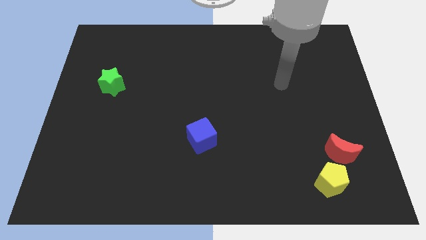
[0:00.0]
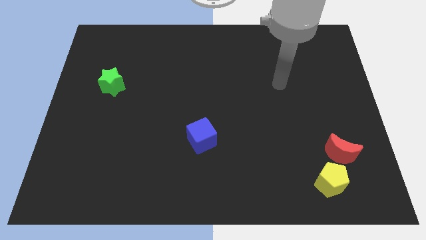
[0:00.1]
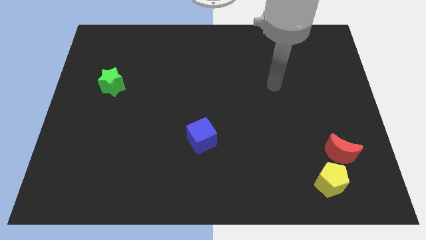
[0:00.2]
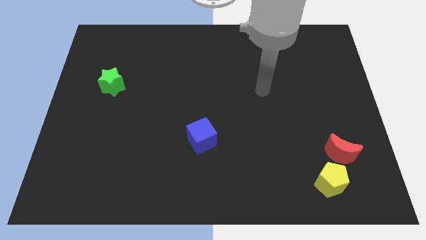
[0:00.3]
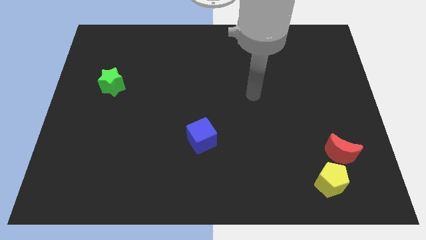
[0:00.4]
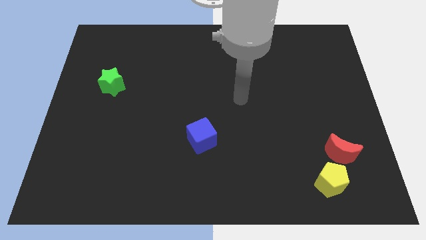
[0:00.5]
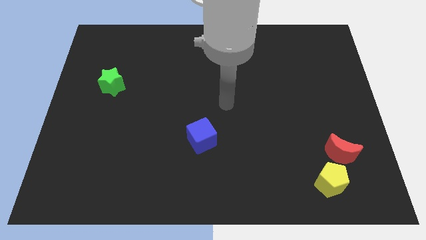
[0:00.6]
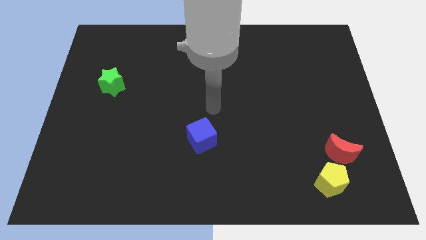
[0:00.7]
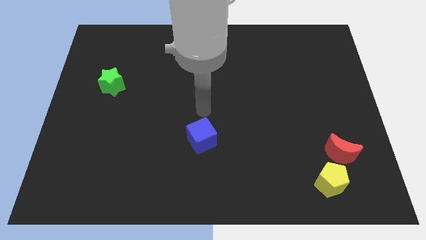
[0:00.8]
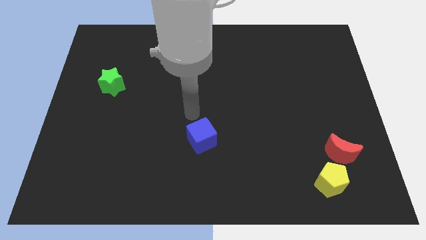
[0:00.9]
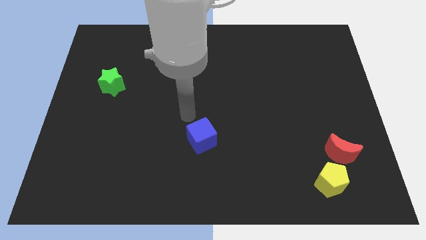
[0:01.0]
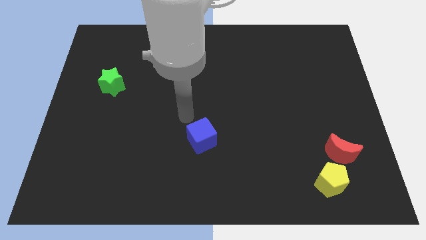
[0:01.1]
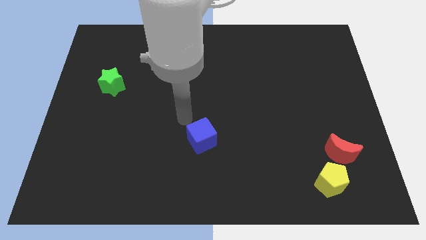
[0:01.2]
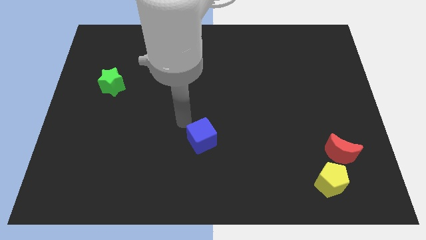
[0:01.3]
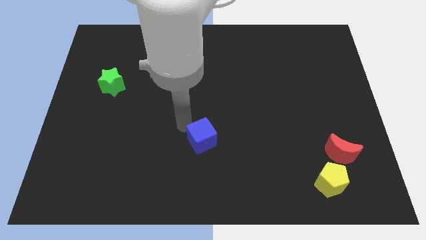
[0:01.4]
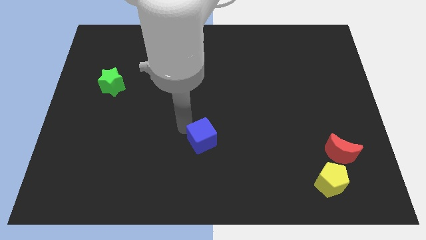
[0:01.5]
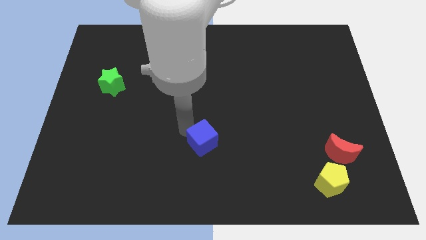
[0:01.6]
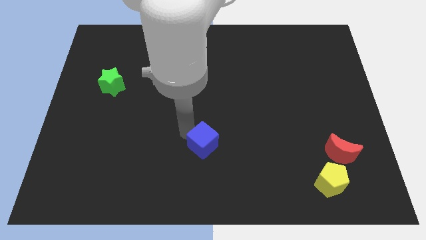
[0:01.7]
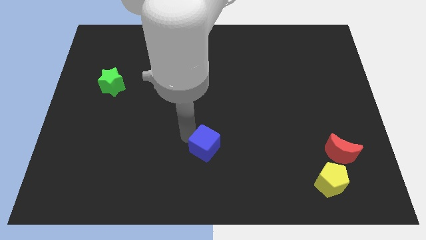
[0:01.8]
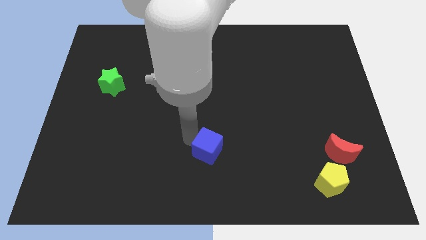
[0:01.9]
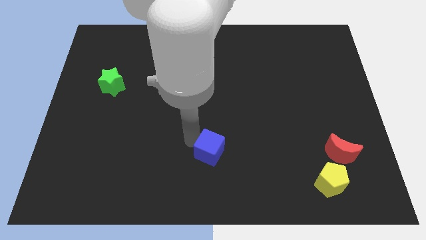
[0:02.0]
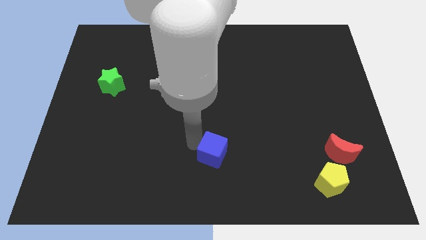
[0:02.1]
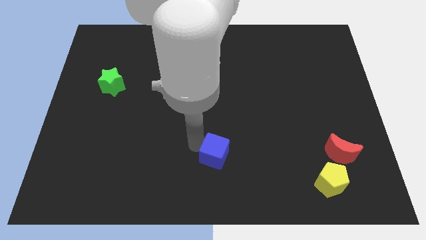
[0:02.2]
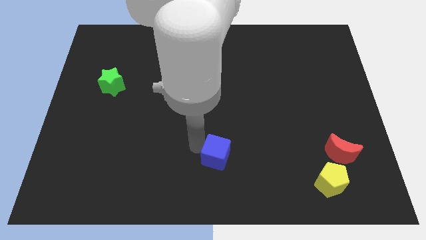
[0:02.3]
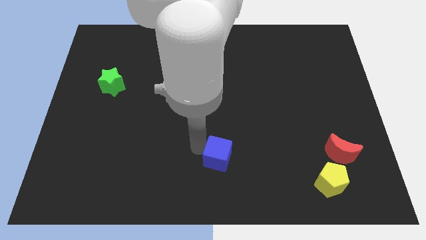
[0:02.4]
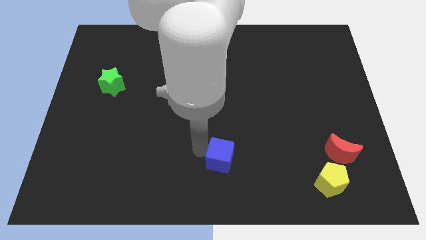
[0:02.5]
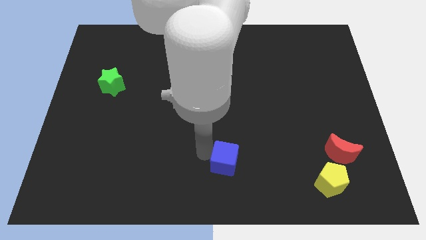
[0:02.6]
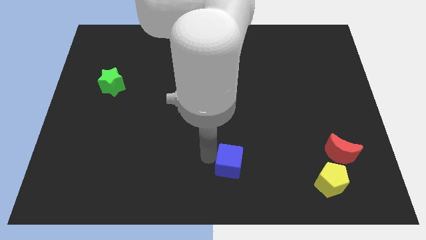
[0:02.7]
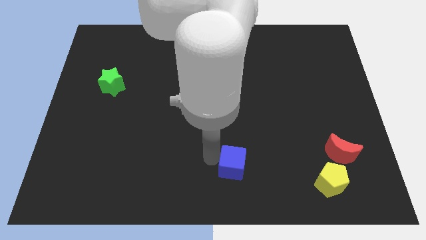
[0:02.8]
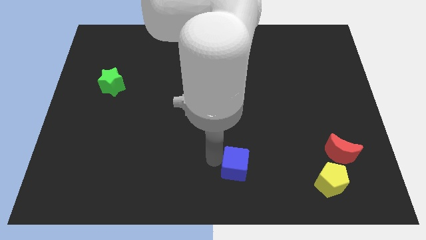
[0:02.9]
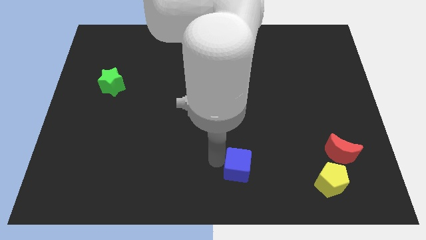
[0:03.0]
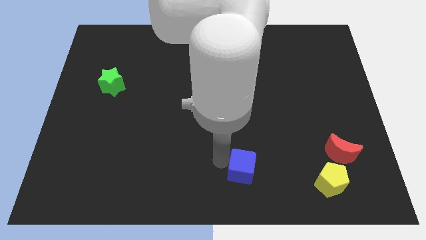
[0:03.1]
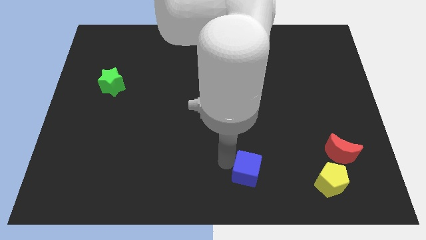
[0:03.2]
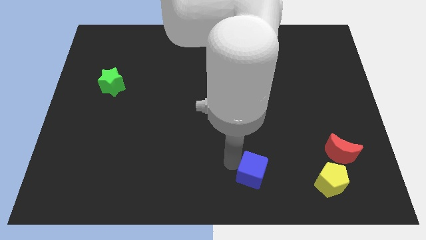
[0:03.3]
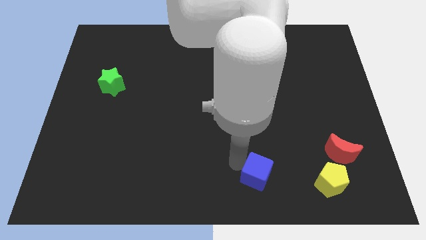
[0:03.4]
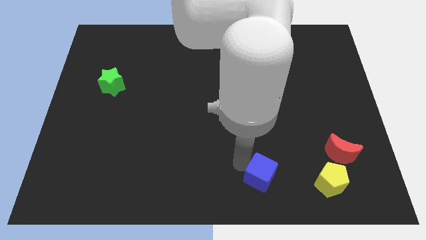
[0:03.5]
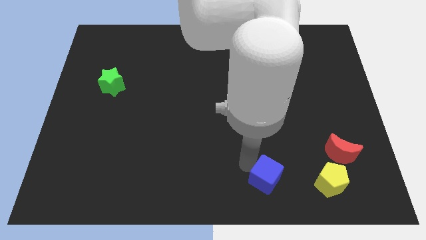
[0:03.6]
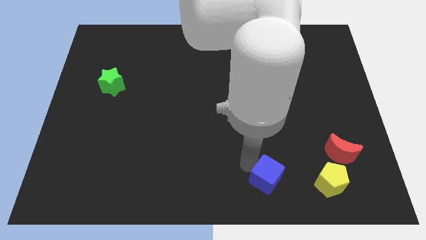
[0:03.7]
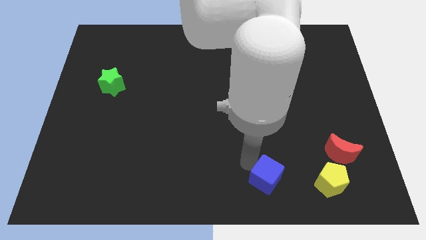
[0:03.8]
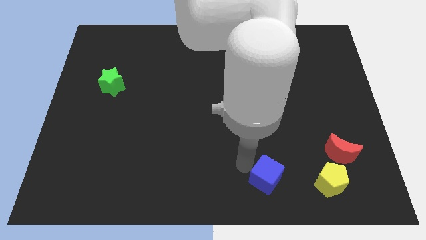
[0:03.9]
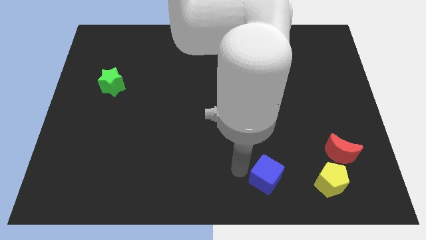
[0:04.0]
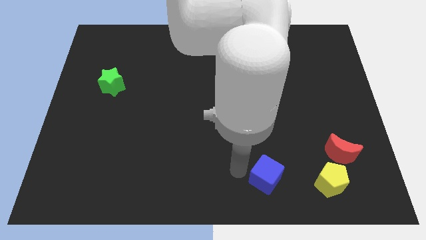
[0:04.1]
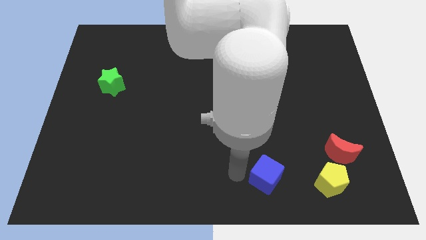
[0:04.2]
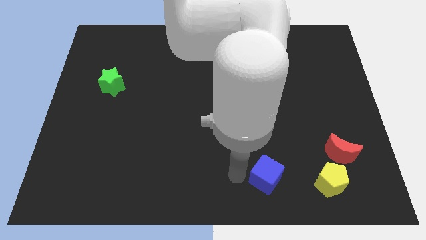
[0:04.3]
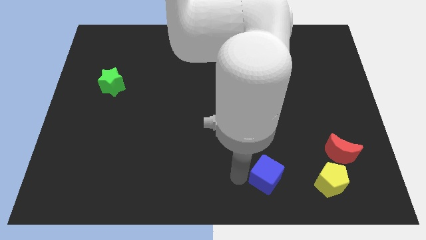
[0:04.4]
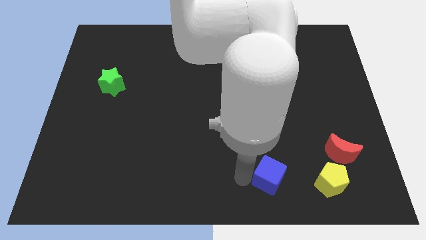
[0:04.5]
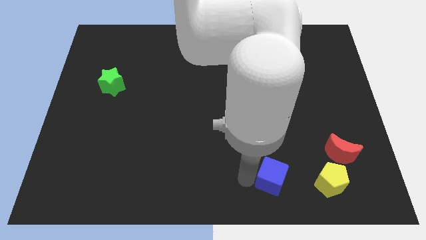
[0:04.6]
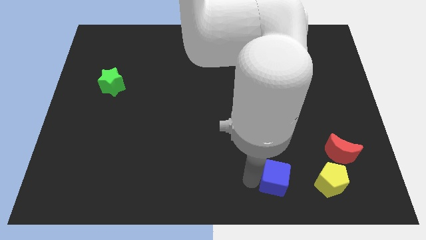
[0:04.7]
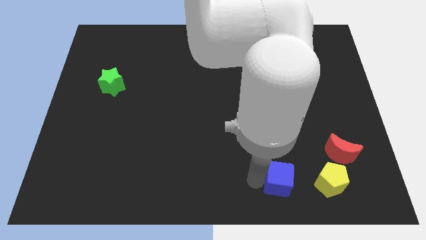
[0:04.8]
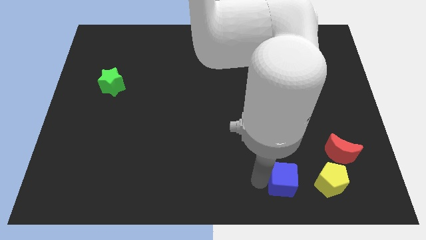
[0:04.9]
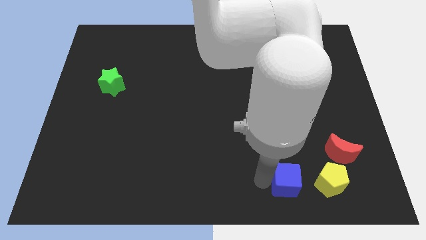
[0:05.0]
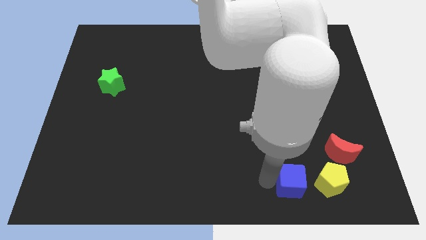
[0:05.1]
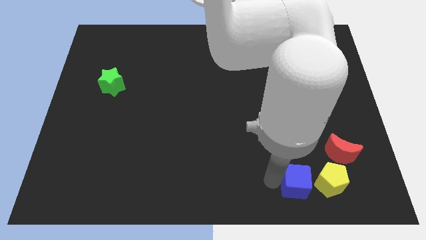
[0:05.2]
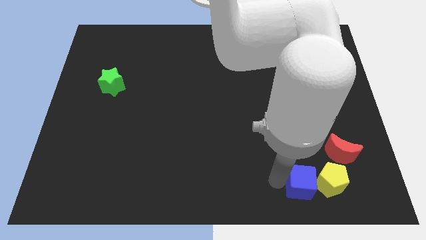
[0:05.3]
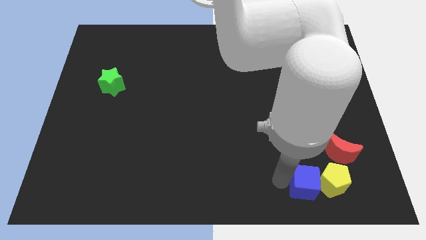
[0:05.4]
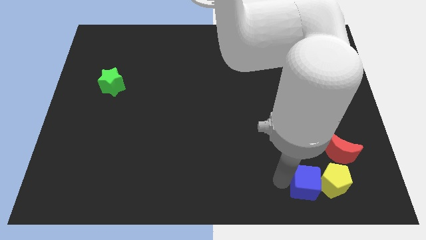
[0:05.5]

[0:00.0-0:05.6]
push the cube next to the pentagon

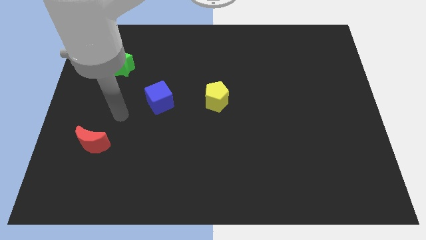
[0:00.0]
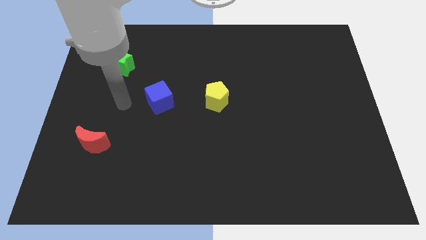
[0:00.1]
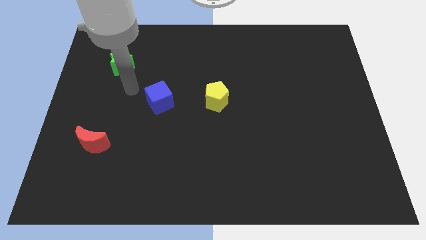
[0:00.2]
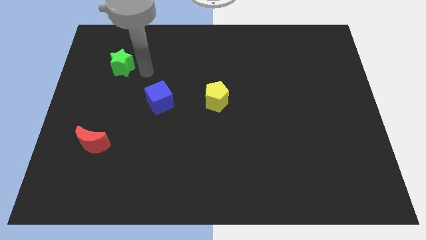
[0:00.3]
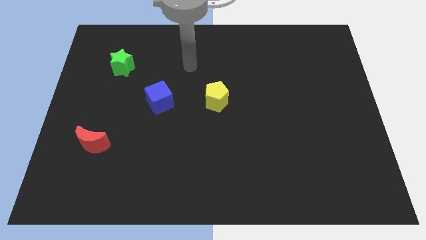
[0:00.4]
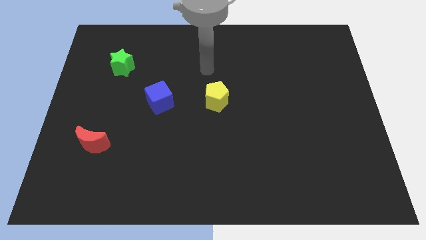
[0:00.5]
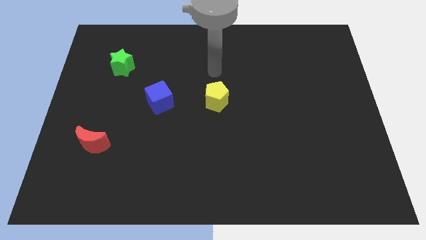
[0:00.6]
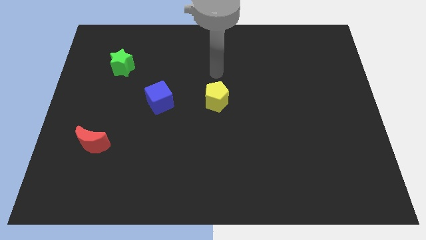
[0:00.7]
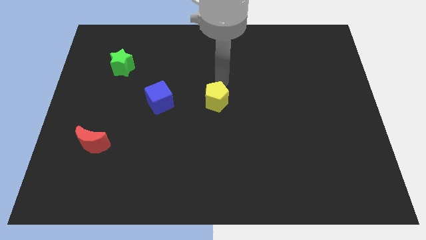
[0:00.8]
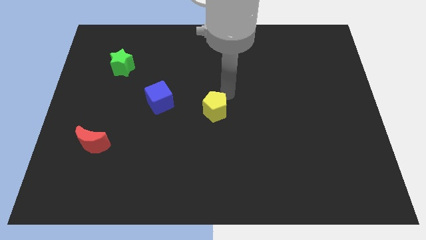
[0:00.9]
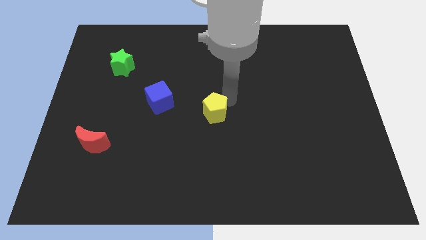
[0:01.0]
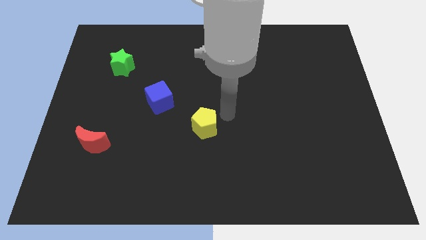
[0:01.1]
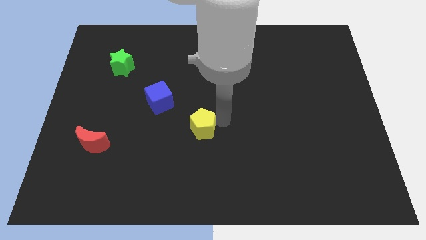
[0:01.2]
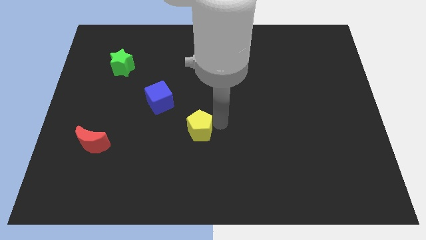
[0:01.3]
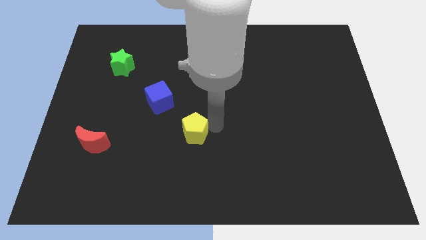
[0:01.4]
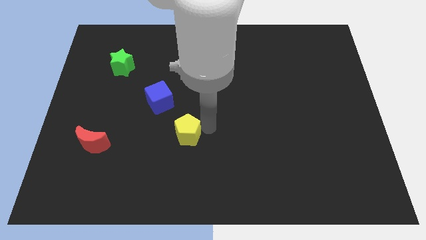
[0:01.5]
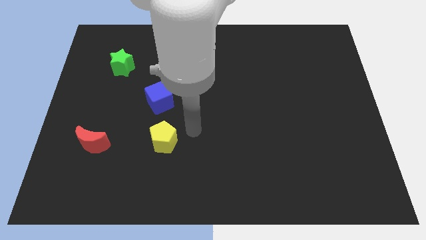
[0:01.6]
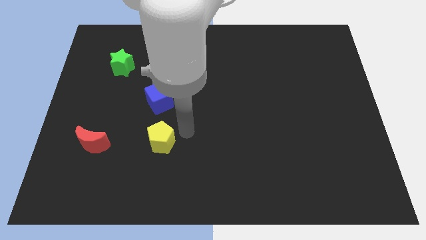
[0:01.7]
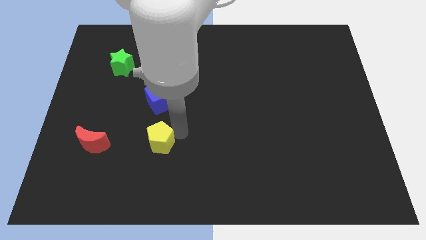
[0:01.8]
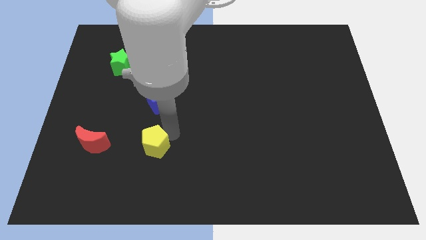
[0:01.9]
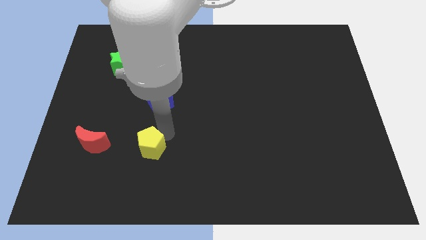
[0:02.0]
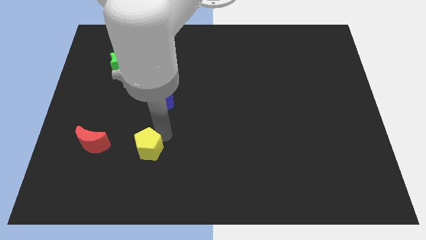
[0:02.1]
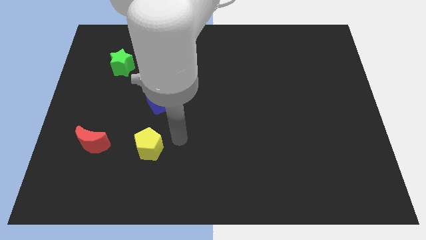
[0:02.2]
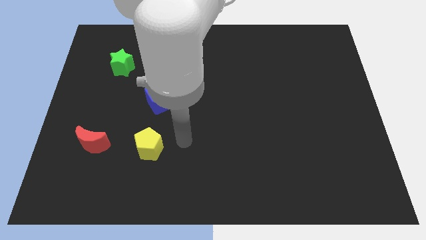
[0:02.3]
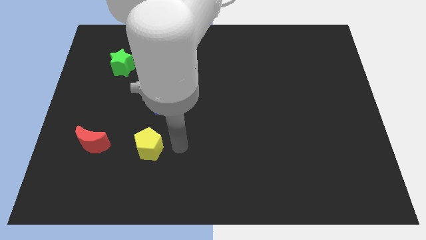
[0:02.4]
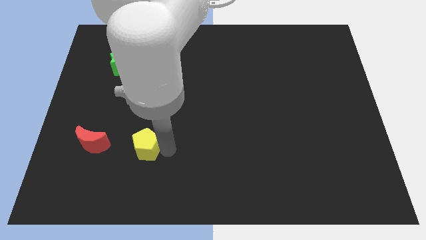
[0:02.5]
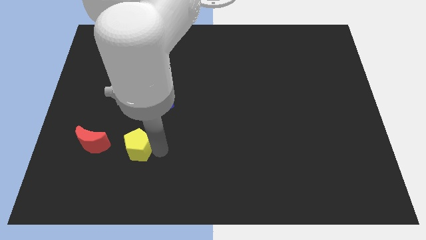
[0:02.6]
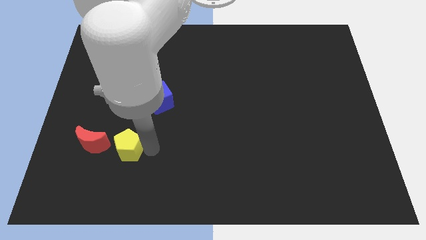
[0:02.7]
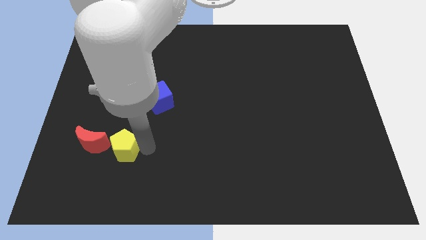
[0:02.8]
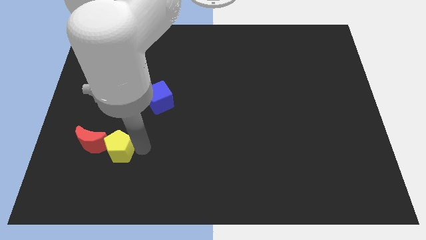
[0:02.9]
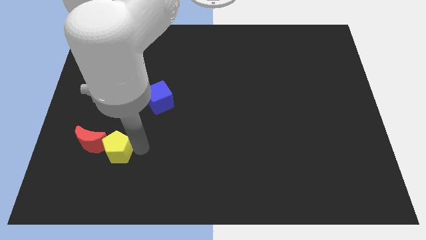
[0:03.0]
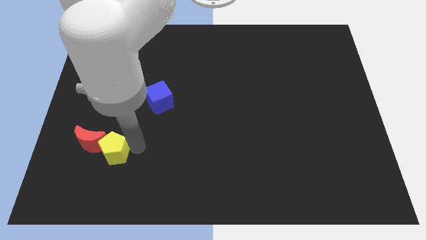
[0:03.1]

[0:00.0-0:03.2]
push the yellow block to the red moon
